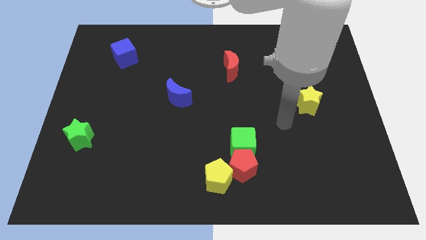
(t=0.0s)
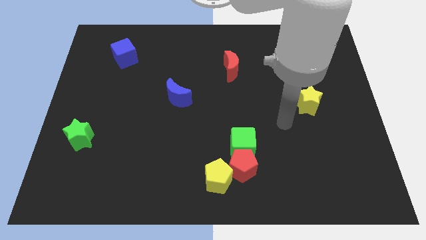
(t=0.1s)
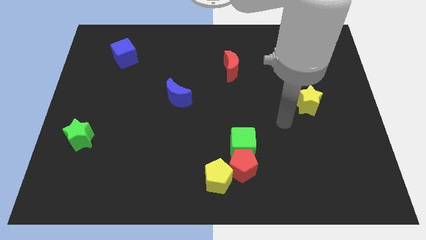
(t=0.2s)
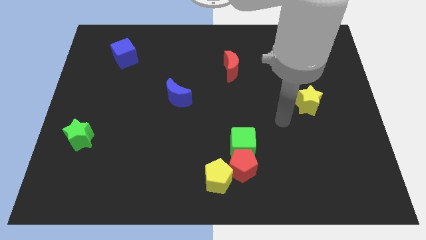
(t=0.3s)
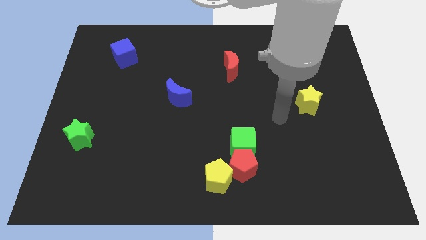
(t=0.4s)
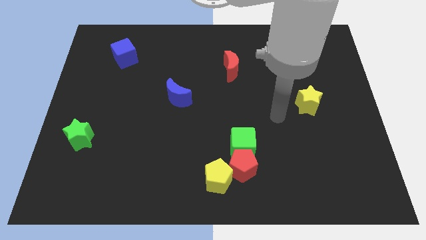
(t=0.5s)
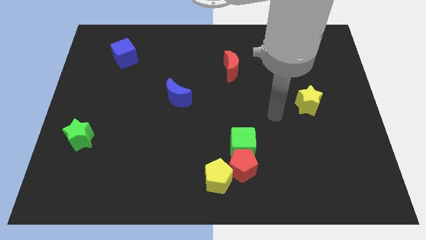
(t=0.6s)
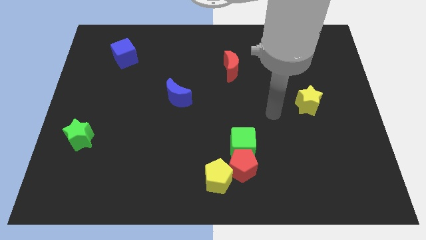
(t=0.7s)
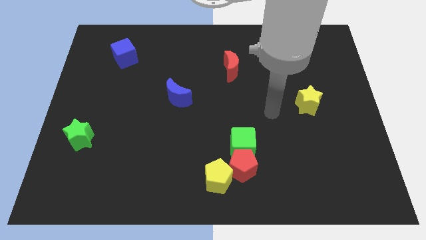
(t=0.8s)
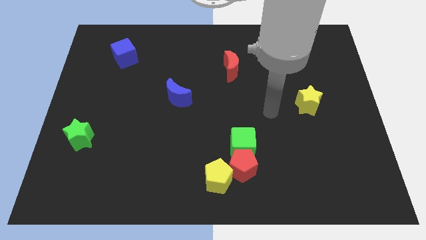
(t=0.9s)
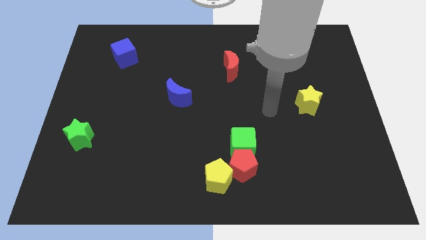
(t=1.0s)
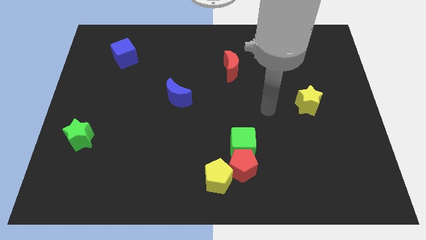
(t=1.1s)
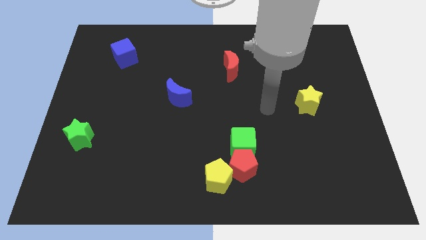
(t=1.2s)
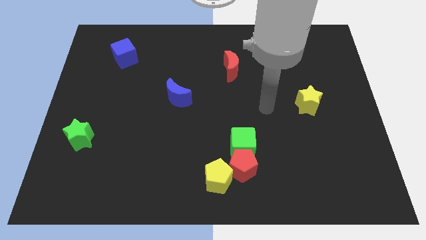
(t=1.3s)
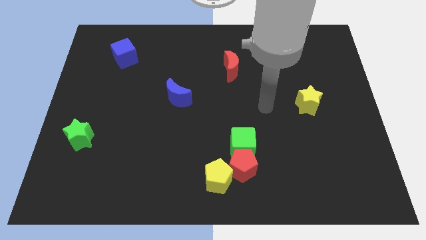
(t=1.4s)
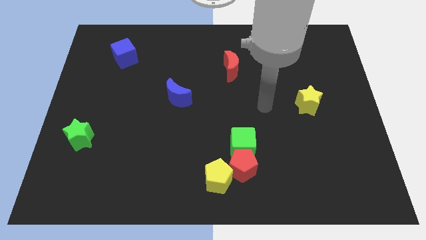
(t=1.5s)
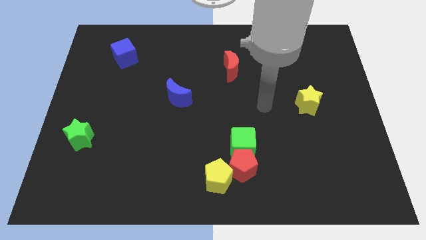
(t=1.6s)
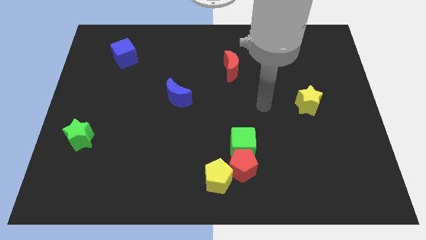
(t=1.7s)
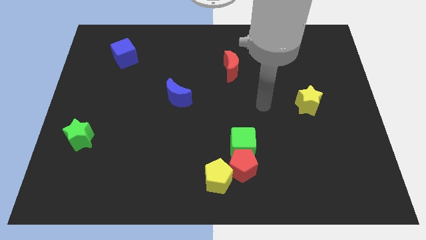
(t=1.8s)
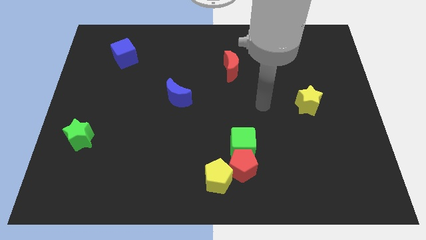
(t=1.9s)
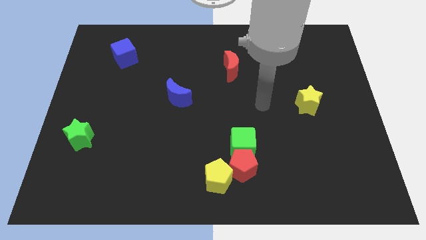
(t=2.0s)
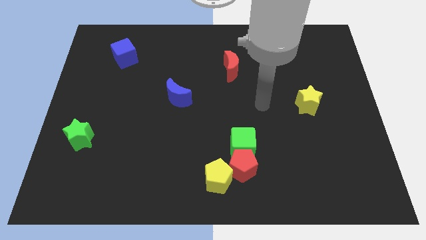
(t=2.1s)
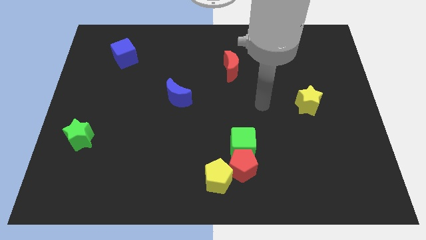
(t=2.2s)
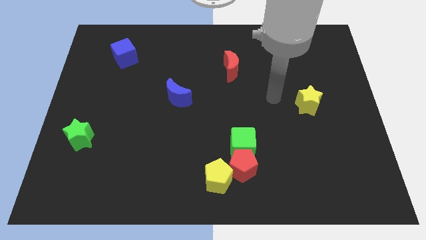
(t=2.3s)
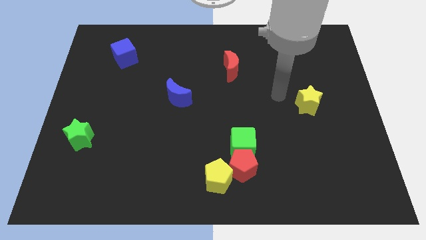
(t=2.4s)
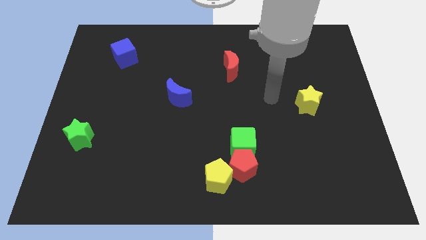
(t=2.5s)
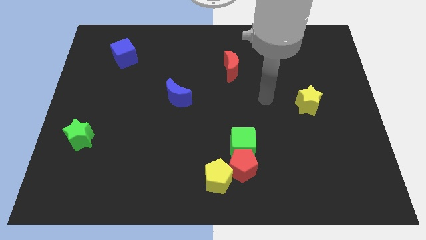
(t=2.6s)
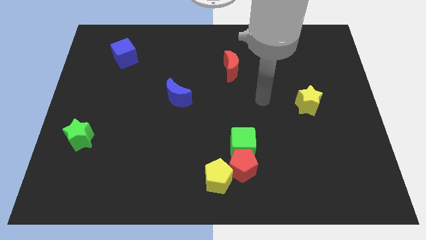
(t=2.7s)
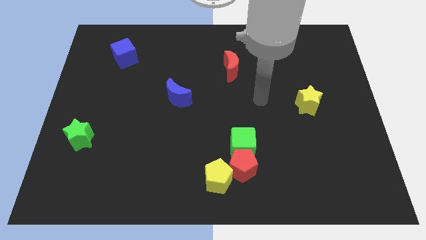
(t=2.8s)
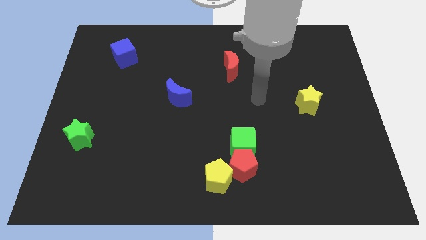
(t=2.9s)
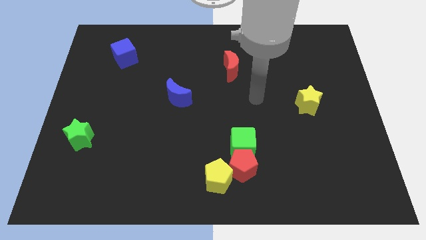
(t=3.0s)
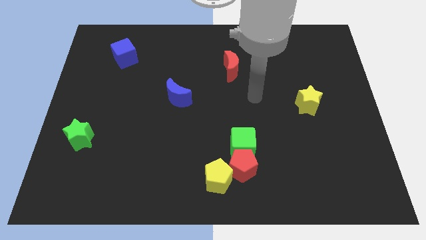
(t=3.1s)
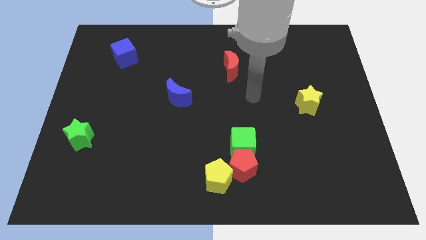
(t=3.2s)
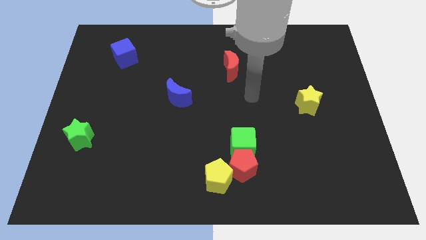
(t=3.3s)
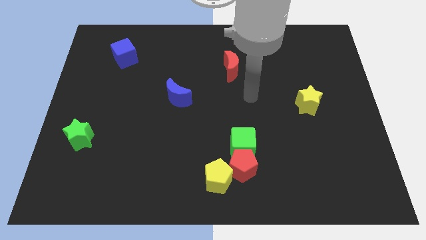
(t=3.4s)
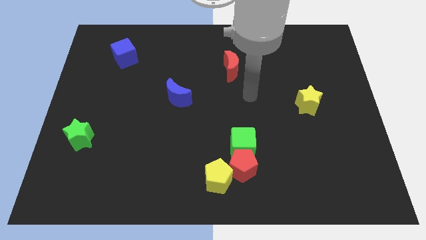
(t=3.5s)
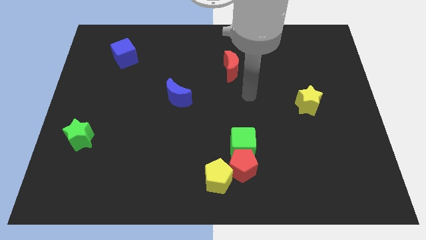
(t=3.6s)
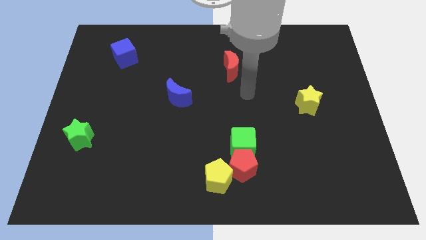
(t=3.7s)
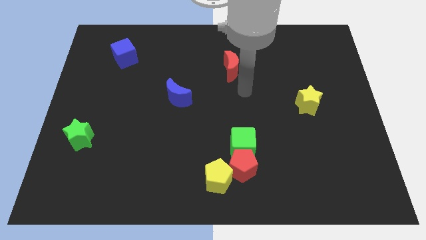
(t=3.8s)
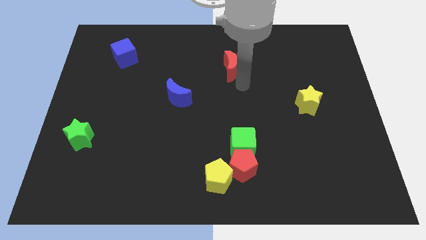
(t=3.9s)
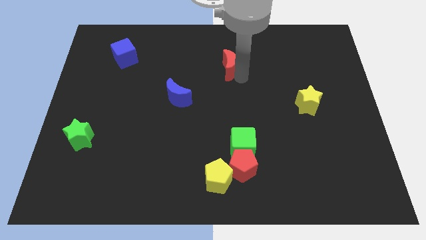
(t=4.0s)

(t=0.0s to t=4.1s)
go and touch the bottom of red crescent

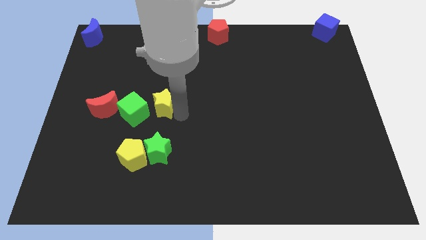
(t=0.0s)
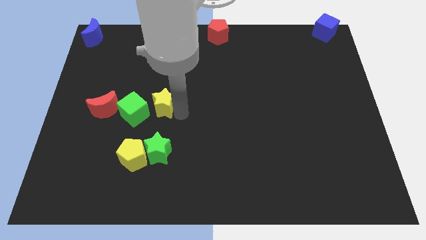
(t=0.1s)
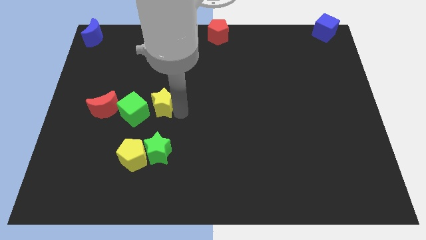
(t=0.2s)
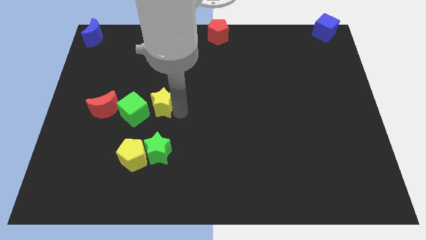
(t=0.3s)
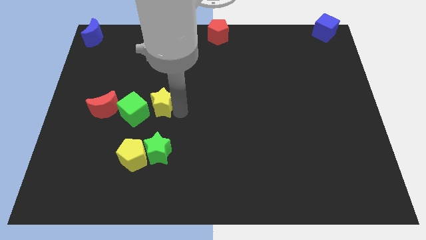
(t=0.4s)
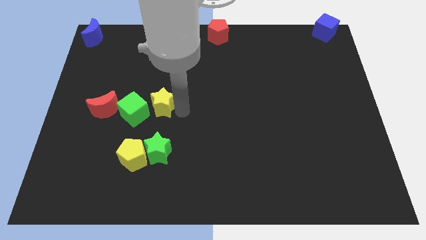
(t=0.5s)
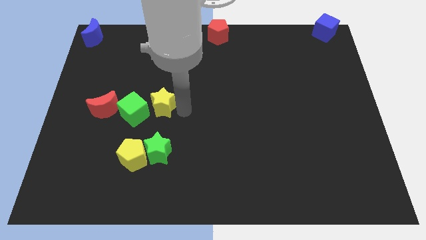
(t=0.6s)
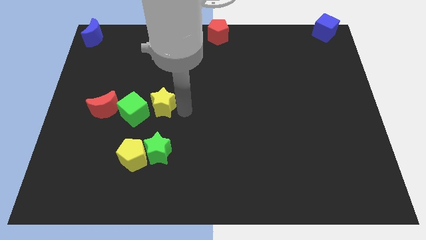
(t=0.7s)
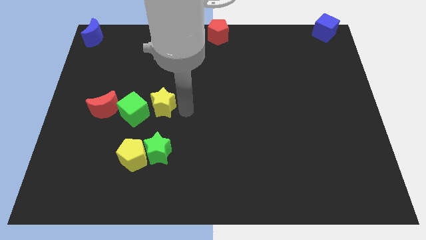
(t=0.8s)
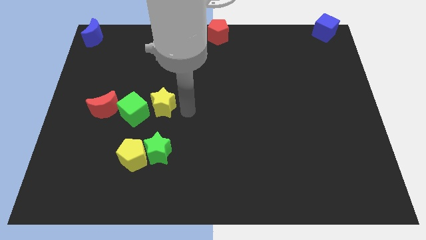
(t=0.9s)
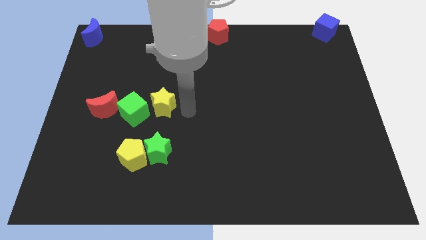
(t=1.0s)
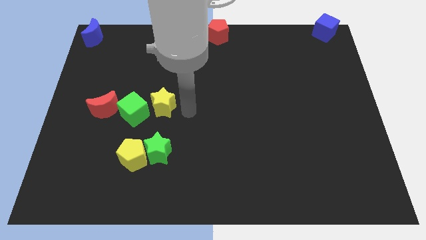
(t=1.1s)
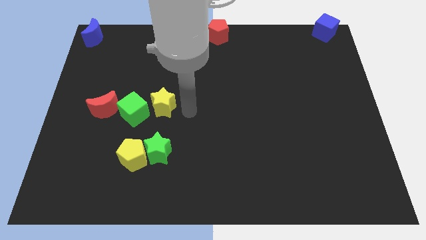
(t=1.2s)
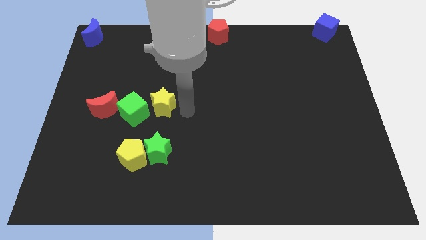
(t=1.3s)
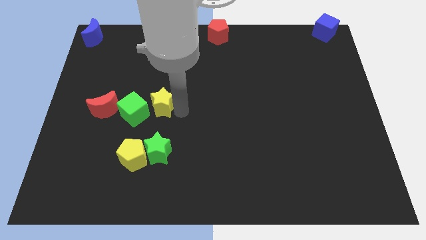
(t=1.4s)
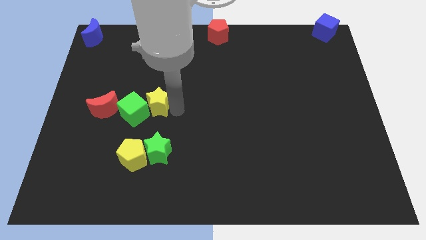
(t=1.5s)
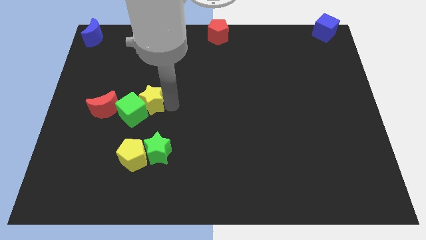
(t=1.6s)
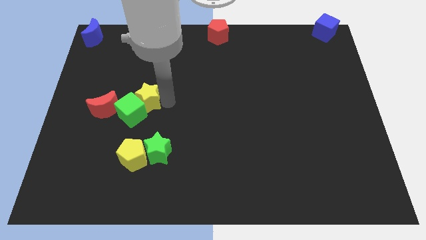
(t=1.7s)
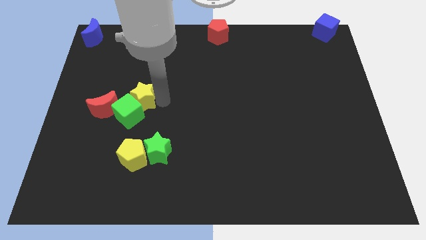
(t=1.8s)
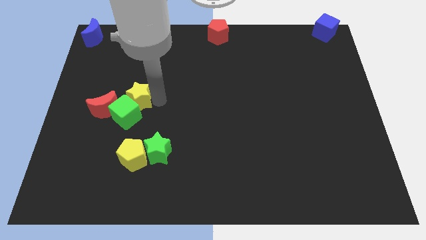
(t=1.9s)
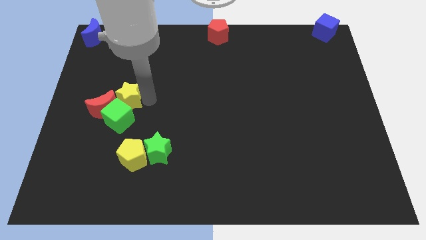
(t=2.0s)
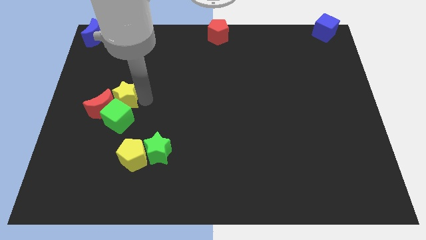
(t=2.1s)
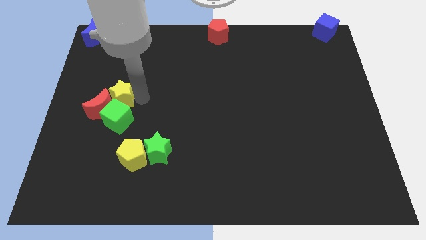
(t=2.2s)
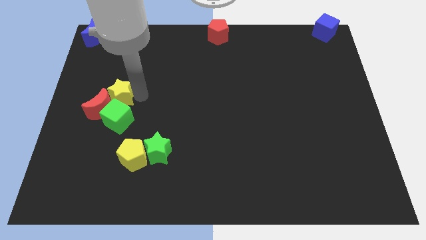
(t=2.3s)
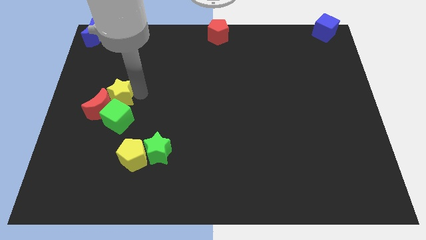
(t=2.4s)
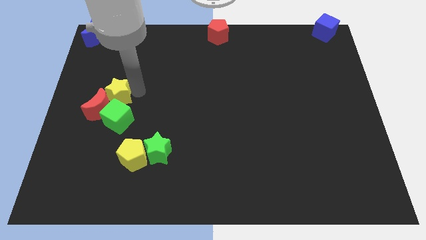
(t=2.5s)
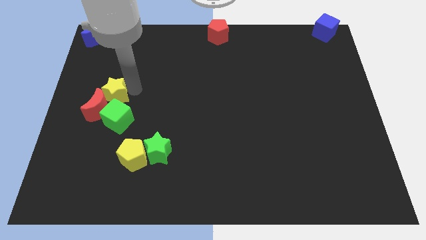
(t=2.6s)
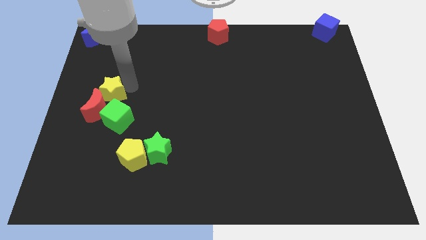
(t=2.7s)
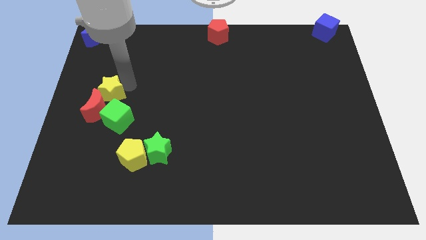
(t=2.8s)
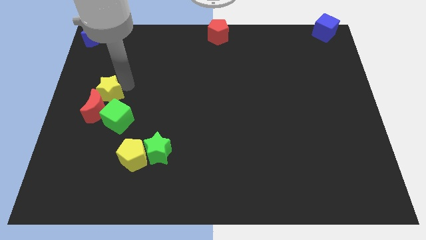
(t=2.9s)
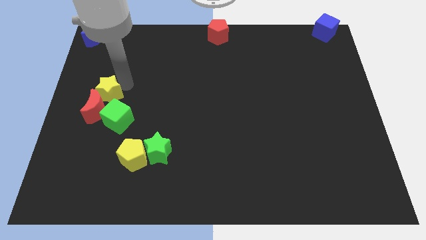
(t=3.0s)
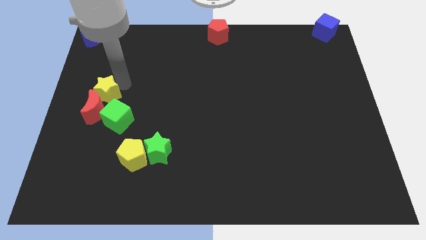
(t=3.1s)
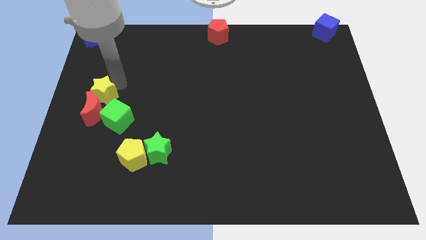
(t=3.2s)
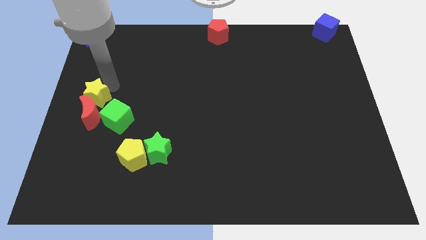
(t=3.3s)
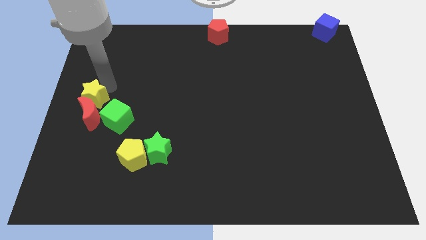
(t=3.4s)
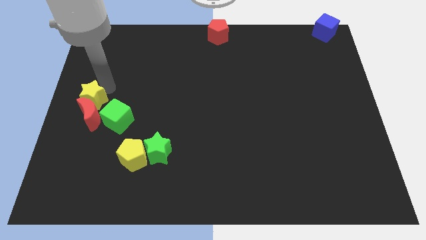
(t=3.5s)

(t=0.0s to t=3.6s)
move the yellow star towards the bottom of the red crescent

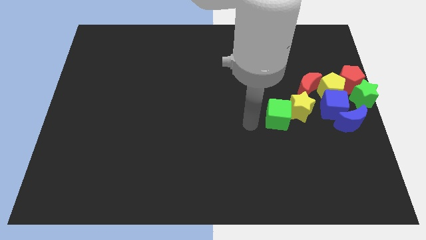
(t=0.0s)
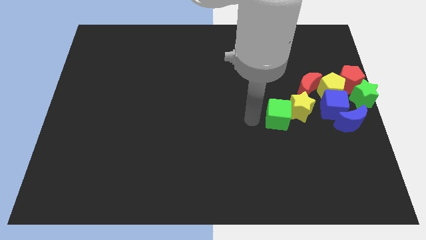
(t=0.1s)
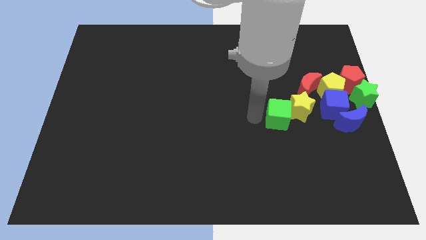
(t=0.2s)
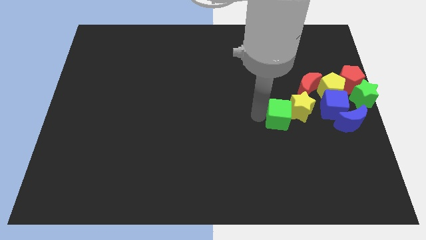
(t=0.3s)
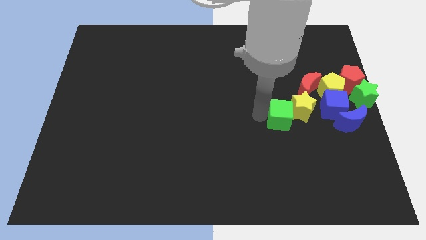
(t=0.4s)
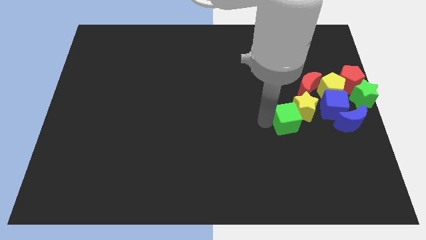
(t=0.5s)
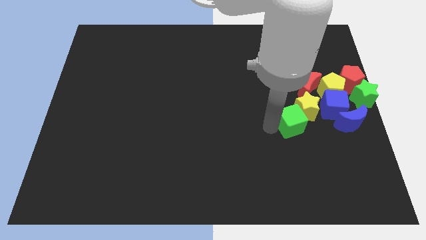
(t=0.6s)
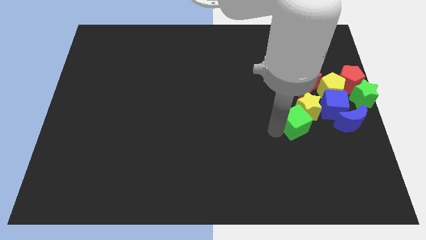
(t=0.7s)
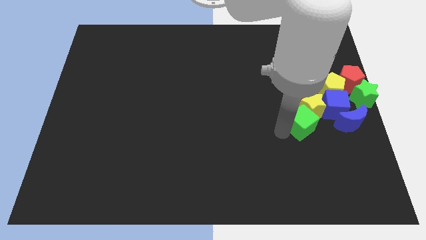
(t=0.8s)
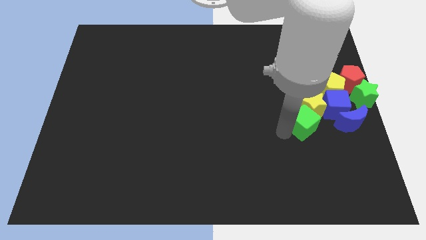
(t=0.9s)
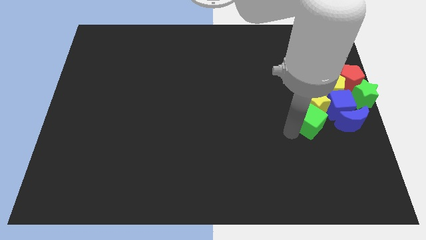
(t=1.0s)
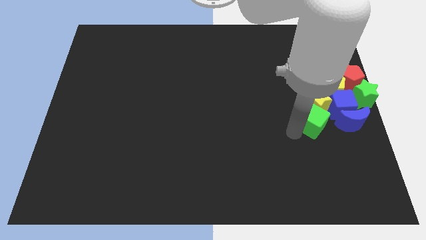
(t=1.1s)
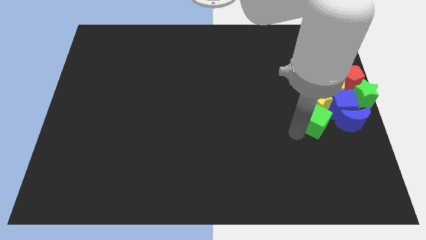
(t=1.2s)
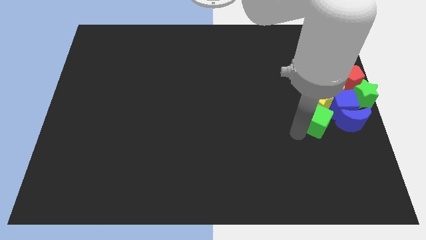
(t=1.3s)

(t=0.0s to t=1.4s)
place the green cube below the yellow star
